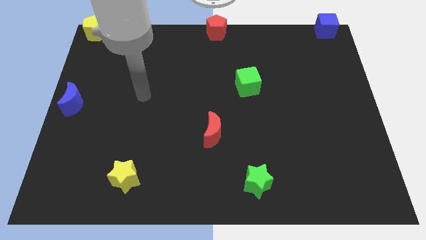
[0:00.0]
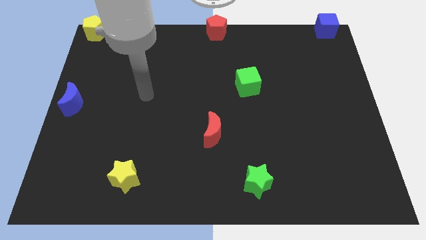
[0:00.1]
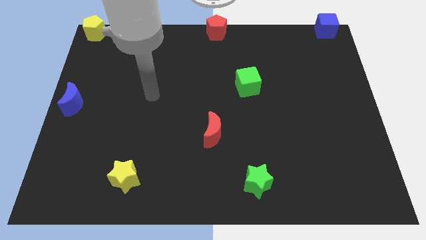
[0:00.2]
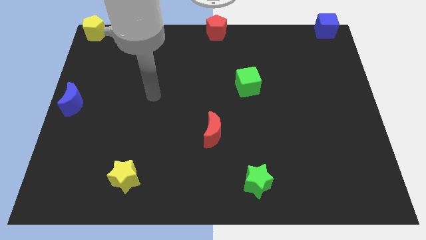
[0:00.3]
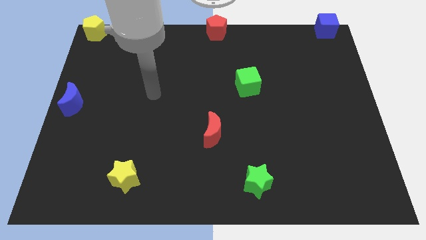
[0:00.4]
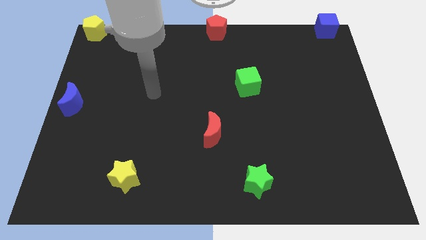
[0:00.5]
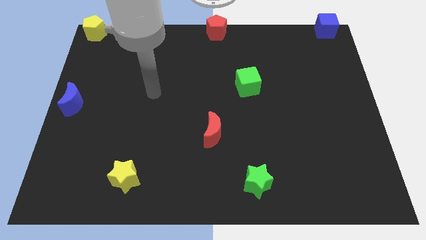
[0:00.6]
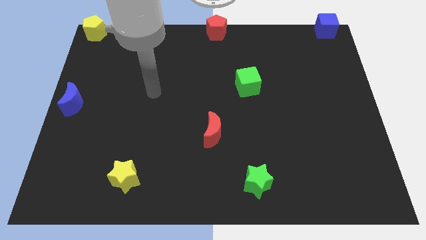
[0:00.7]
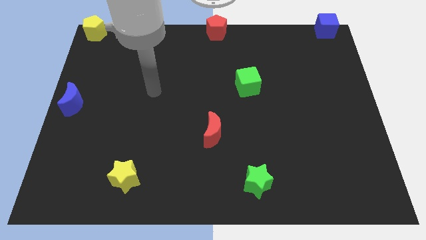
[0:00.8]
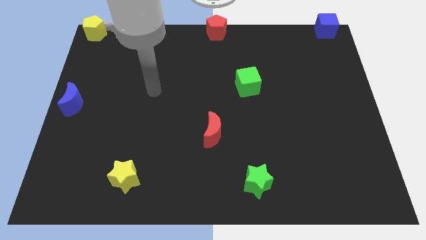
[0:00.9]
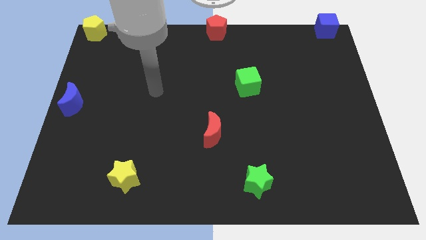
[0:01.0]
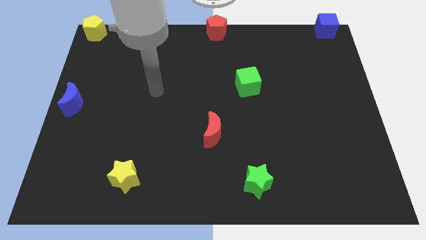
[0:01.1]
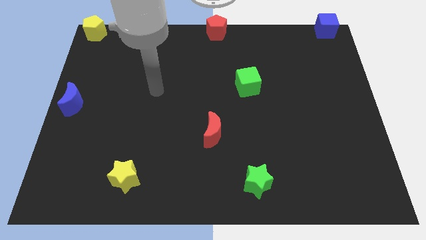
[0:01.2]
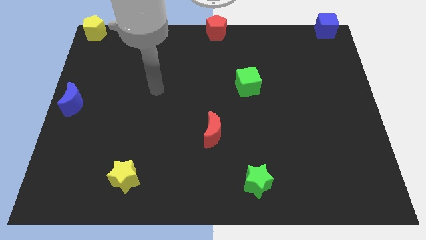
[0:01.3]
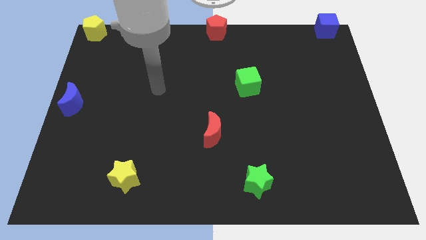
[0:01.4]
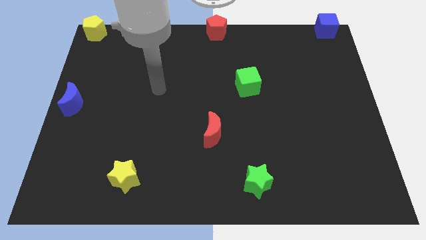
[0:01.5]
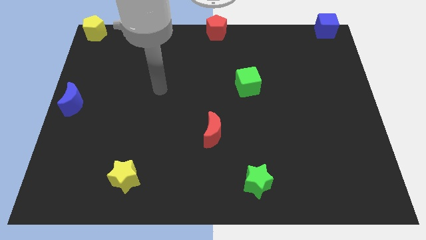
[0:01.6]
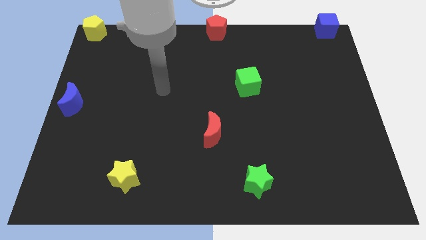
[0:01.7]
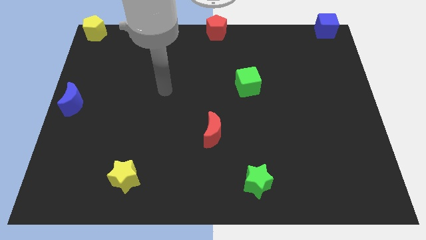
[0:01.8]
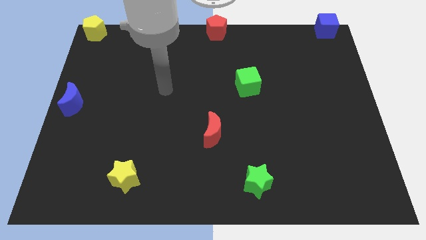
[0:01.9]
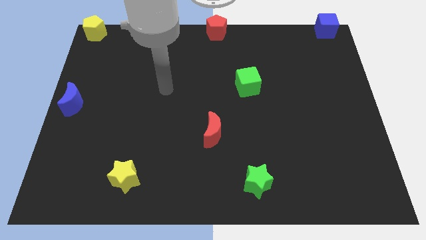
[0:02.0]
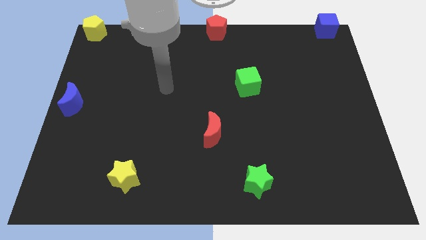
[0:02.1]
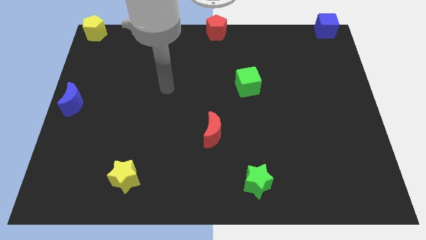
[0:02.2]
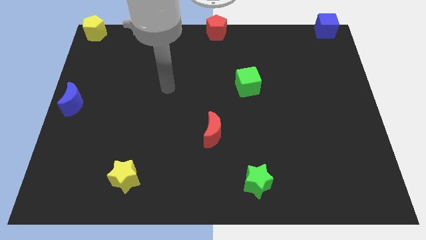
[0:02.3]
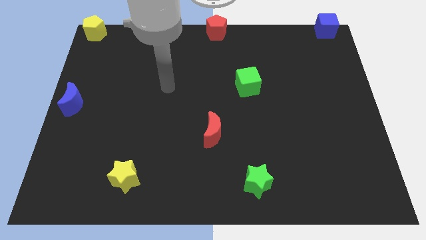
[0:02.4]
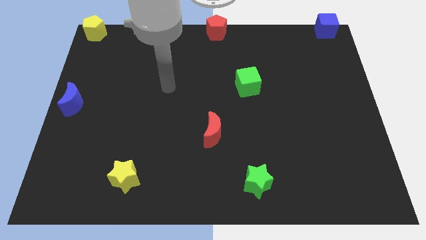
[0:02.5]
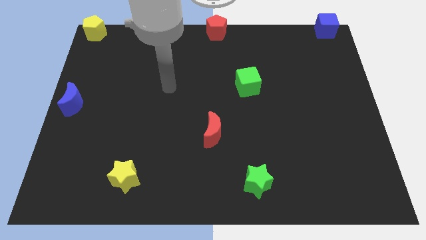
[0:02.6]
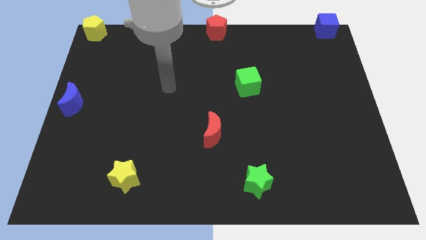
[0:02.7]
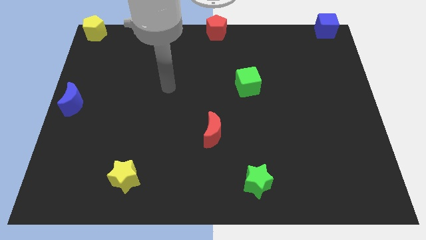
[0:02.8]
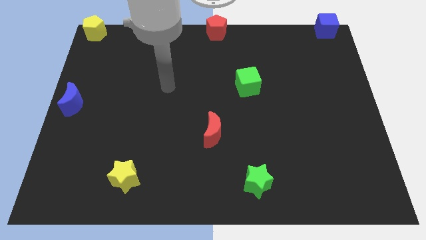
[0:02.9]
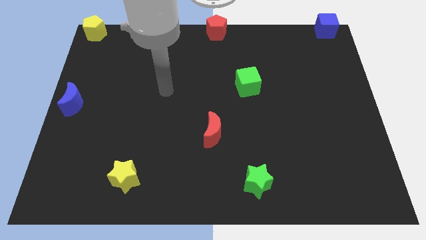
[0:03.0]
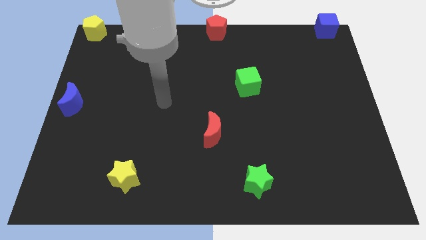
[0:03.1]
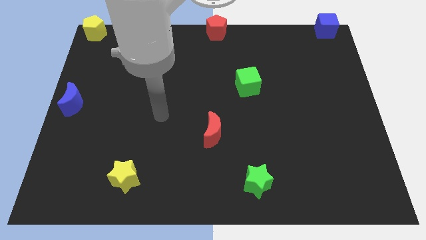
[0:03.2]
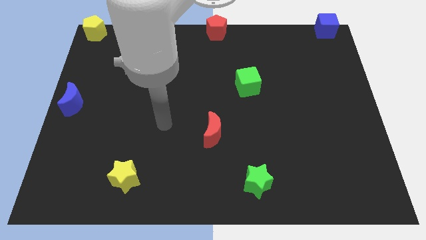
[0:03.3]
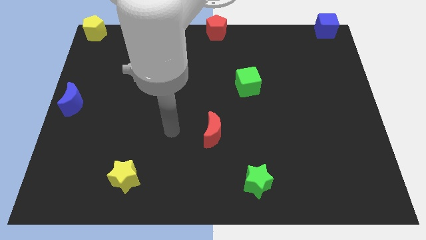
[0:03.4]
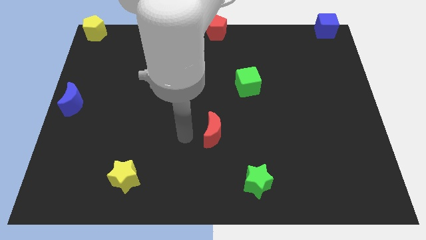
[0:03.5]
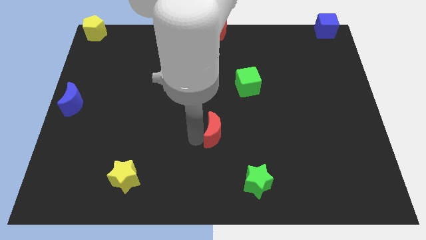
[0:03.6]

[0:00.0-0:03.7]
point your arm at the left side of the red moon

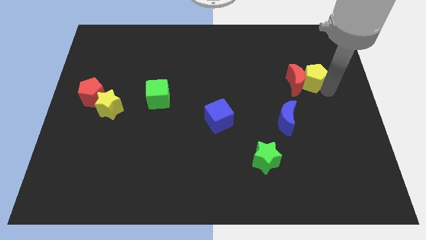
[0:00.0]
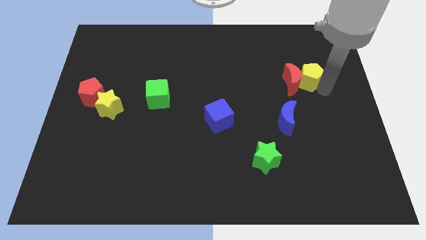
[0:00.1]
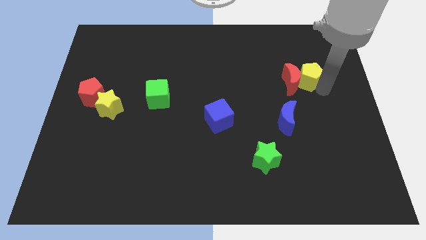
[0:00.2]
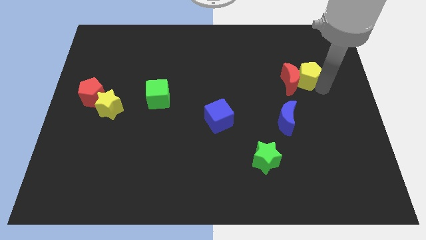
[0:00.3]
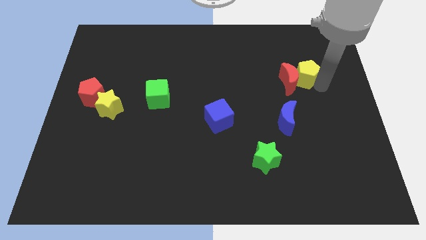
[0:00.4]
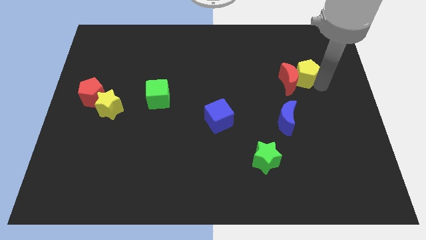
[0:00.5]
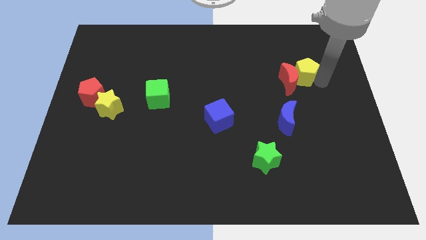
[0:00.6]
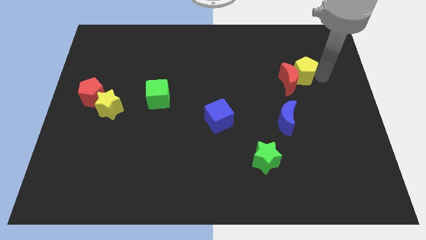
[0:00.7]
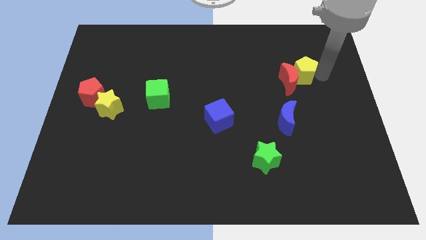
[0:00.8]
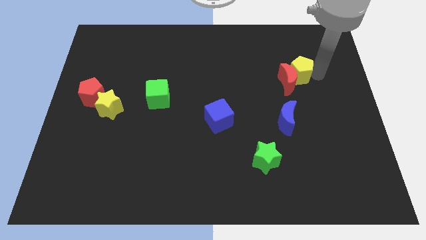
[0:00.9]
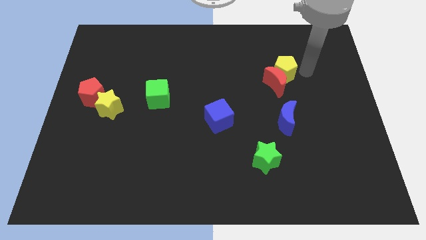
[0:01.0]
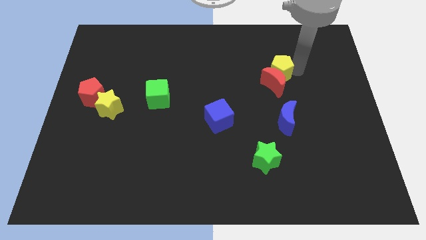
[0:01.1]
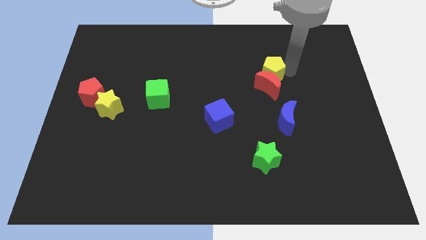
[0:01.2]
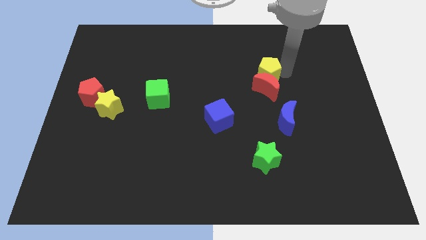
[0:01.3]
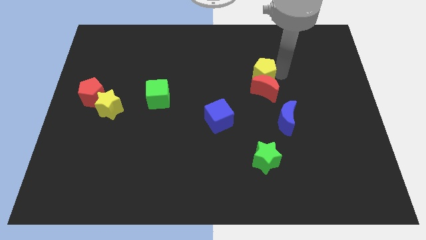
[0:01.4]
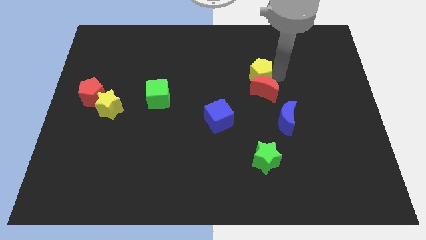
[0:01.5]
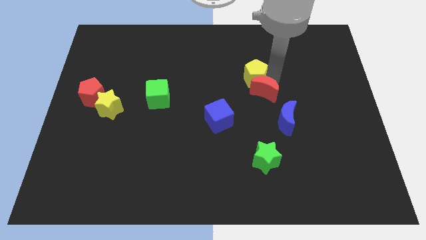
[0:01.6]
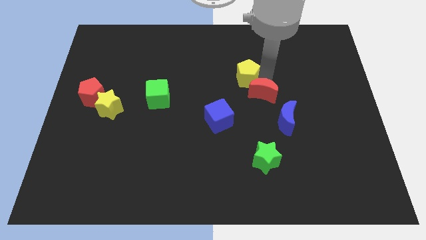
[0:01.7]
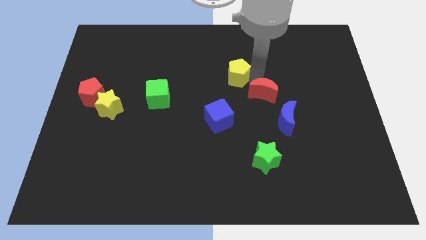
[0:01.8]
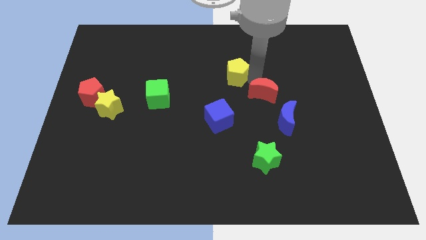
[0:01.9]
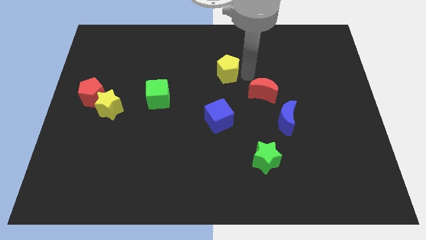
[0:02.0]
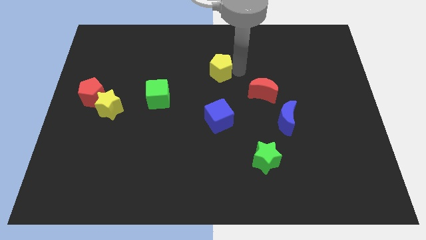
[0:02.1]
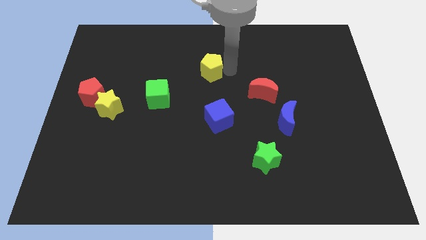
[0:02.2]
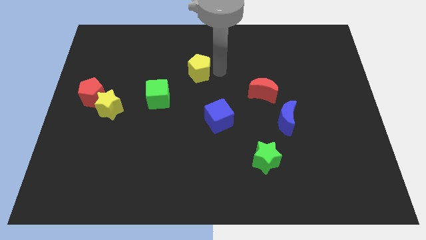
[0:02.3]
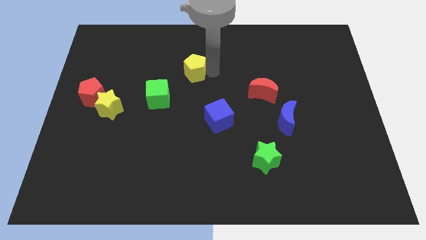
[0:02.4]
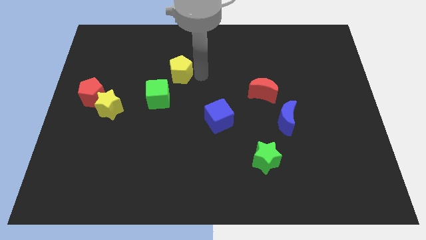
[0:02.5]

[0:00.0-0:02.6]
move the yellow pentagon diagonally to the top right of the green cube

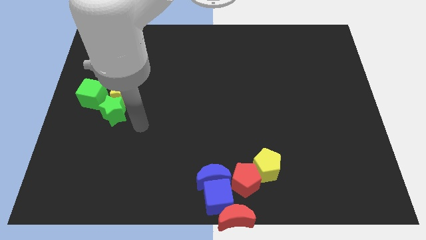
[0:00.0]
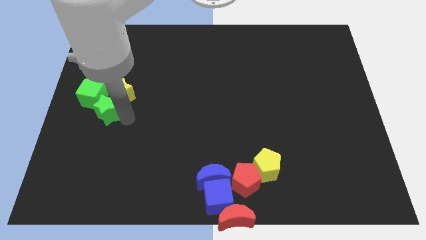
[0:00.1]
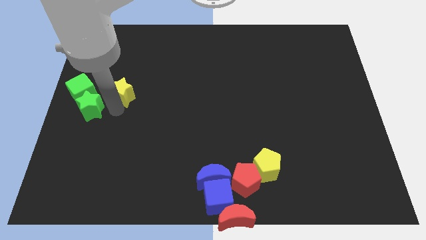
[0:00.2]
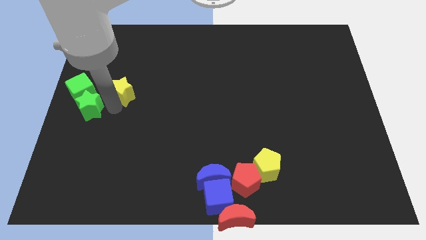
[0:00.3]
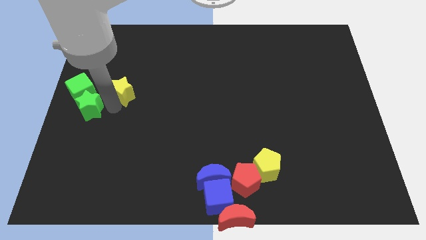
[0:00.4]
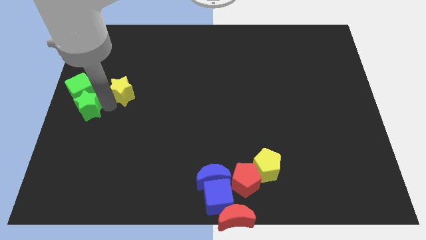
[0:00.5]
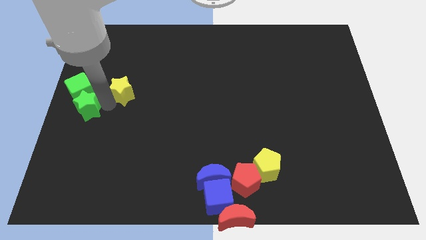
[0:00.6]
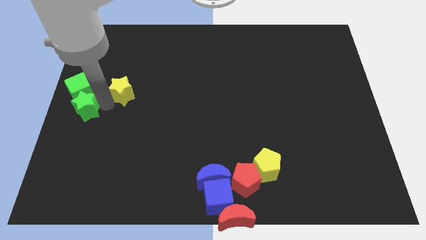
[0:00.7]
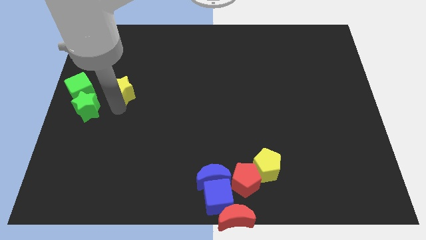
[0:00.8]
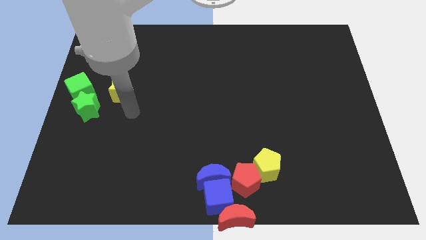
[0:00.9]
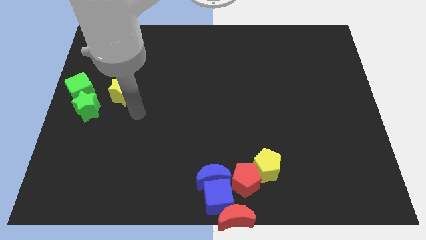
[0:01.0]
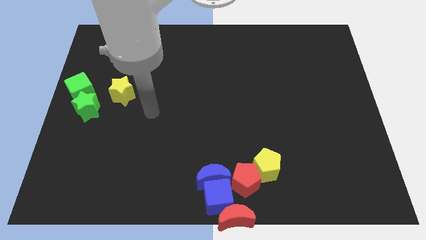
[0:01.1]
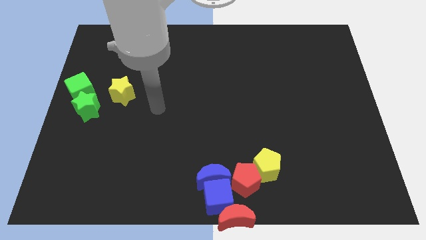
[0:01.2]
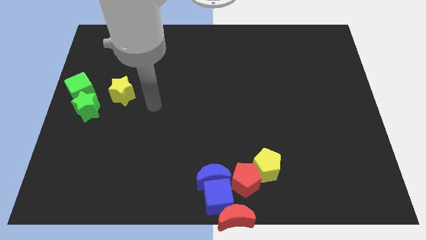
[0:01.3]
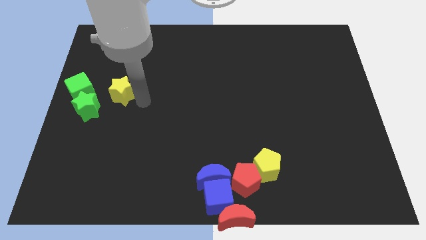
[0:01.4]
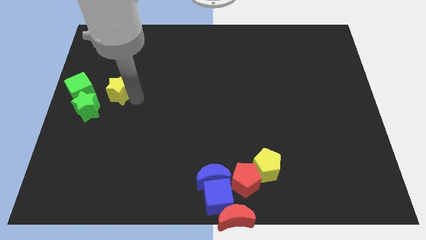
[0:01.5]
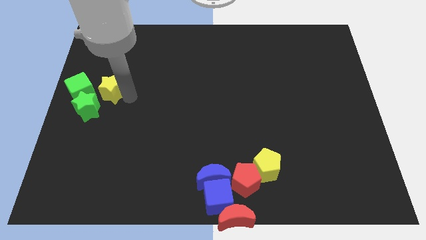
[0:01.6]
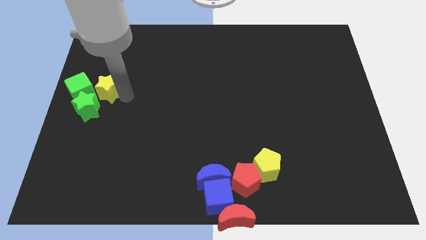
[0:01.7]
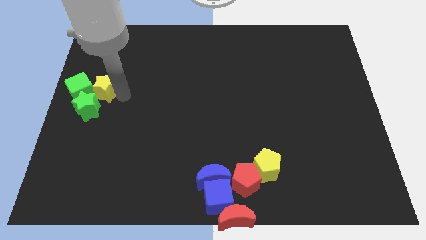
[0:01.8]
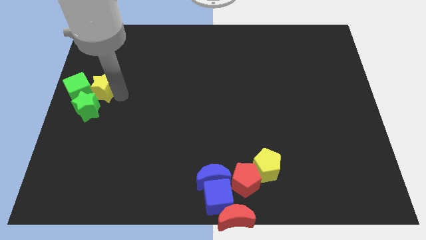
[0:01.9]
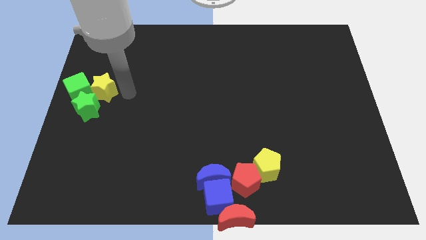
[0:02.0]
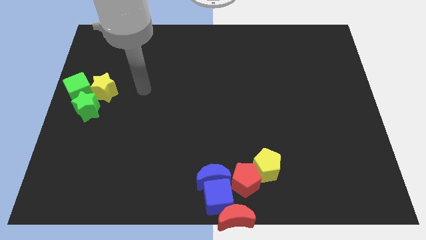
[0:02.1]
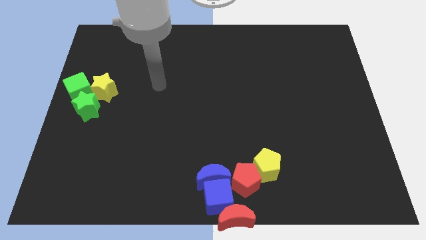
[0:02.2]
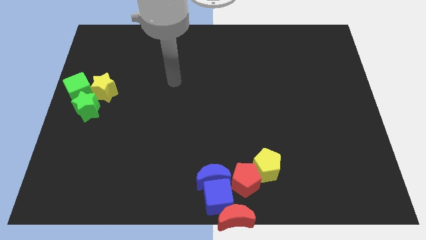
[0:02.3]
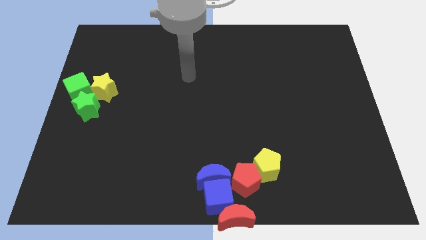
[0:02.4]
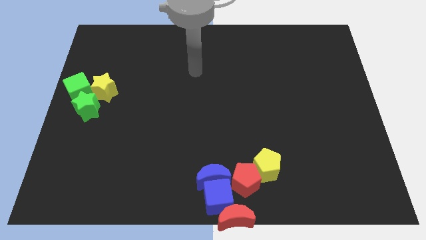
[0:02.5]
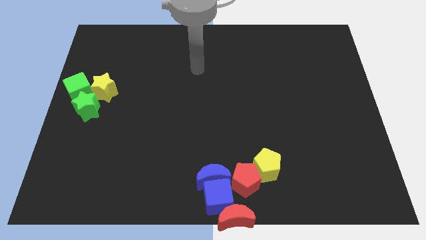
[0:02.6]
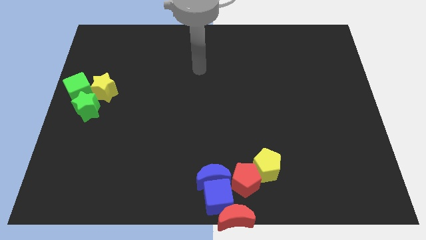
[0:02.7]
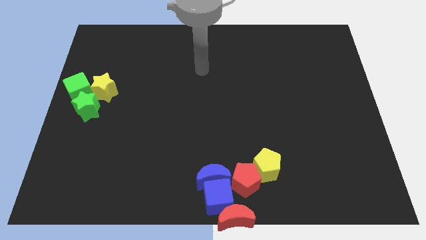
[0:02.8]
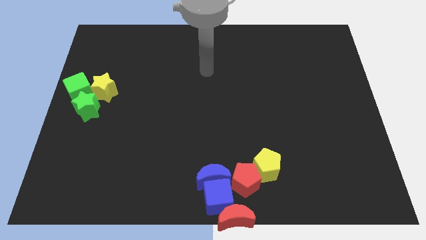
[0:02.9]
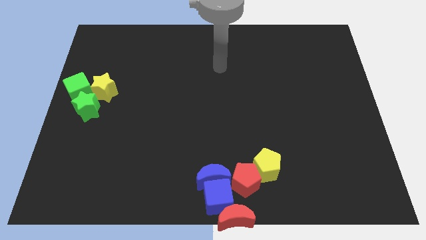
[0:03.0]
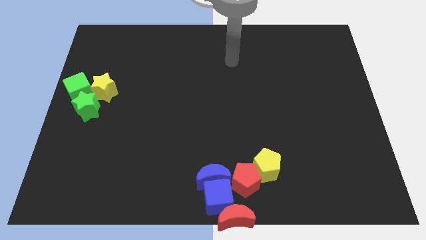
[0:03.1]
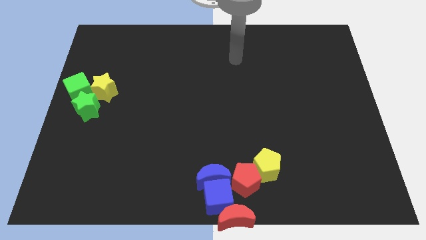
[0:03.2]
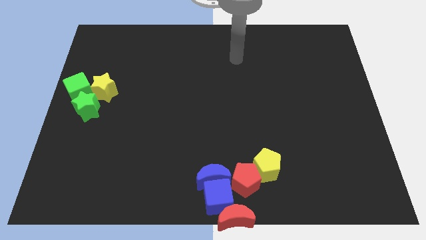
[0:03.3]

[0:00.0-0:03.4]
drag the green blocks and yellow star to the center left
